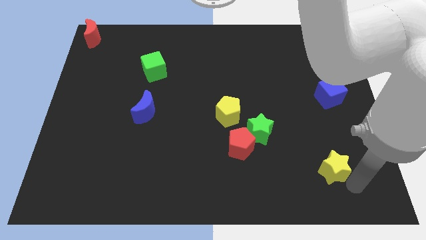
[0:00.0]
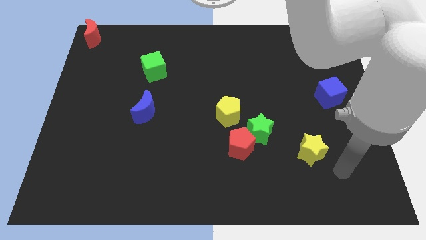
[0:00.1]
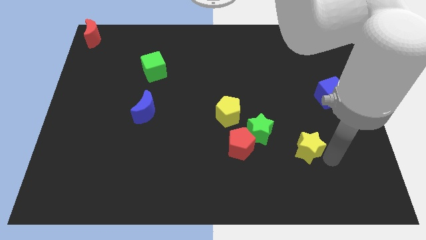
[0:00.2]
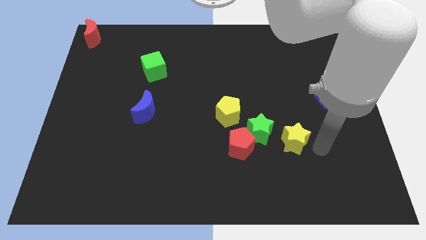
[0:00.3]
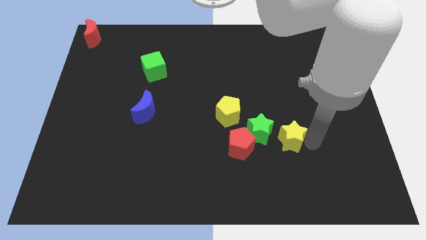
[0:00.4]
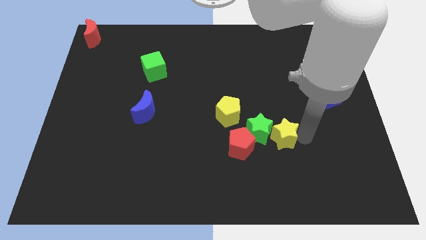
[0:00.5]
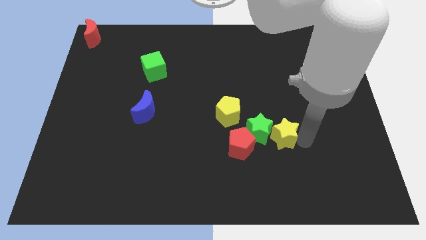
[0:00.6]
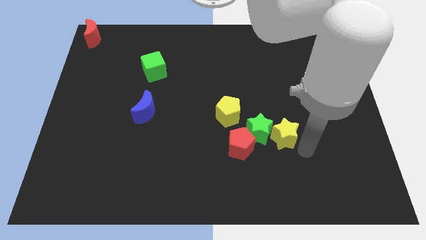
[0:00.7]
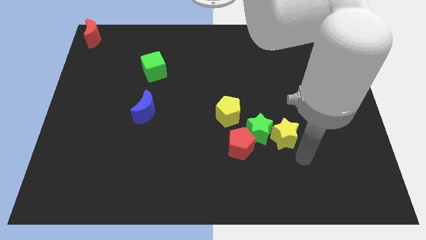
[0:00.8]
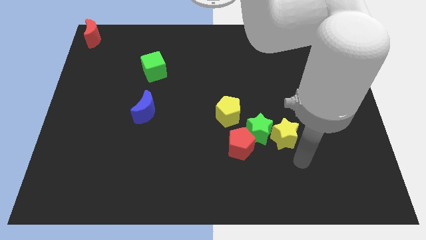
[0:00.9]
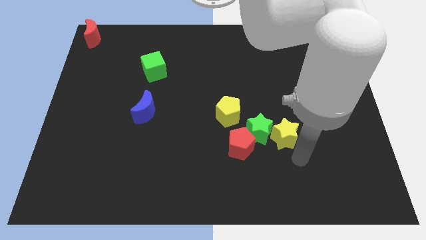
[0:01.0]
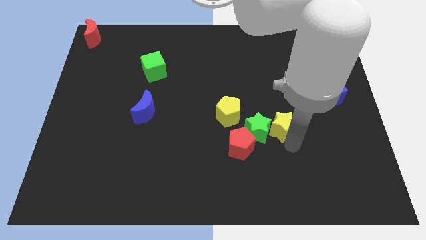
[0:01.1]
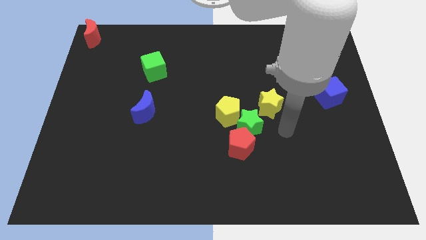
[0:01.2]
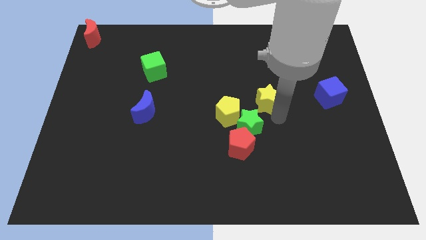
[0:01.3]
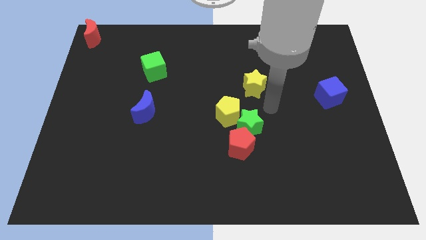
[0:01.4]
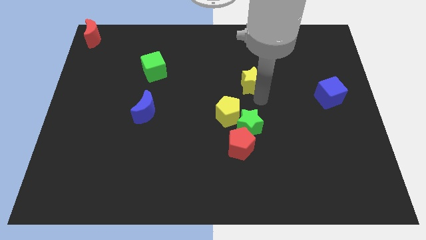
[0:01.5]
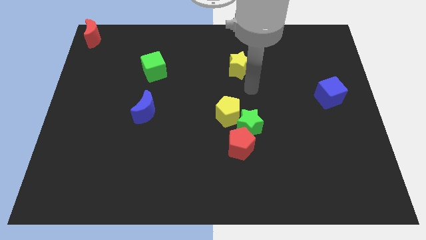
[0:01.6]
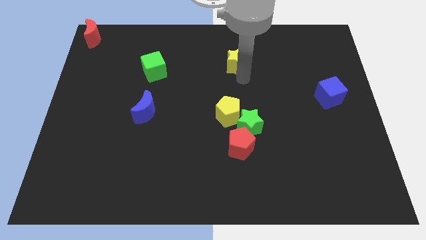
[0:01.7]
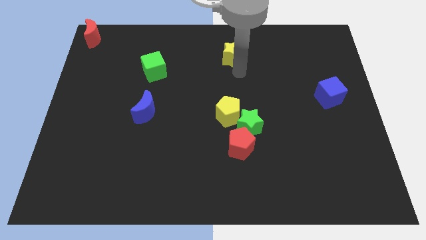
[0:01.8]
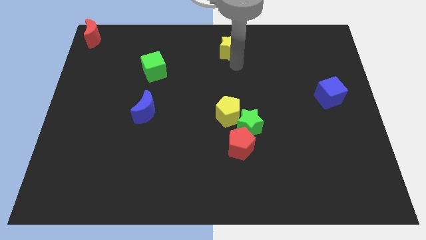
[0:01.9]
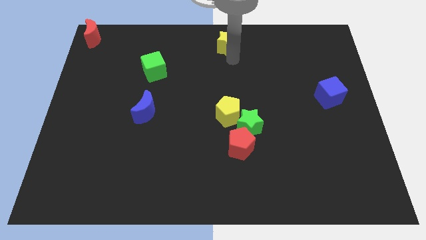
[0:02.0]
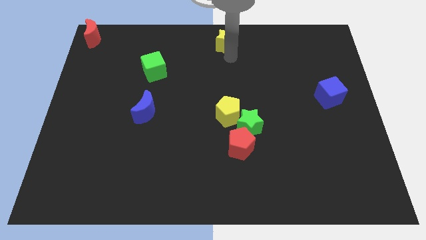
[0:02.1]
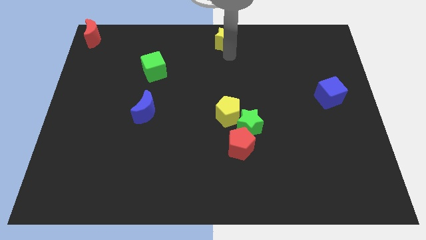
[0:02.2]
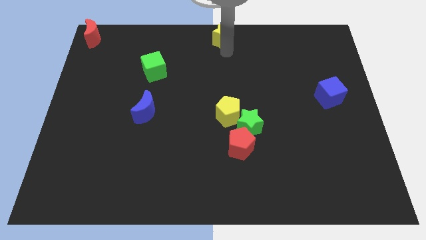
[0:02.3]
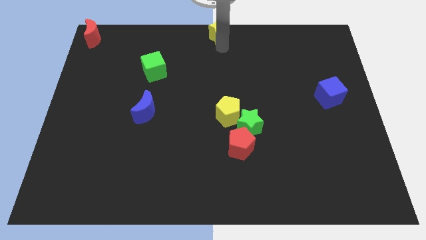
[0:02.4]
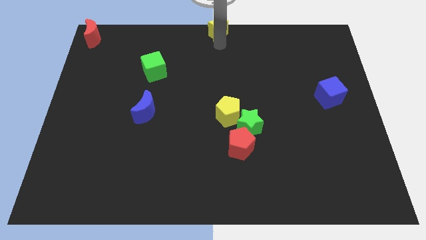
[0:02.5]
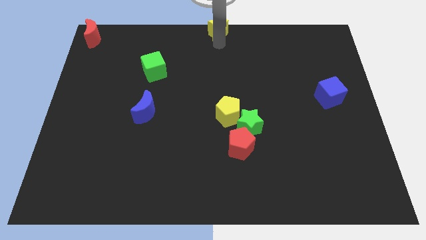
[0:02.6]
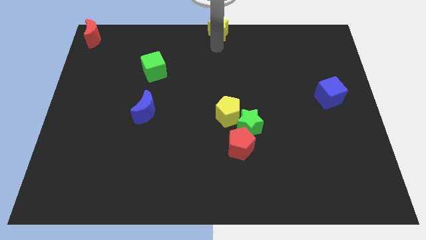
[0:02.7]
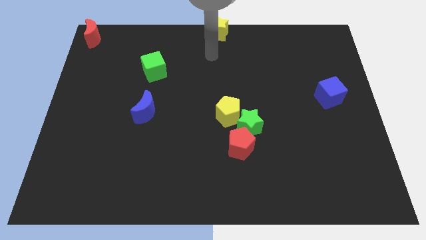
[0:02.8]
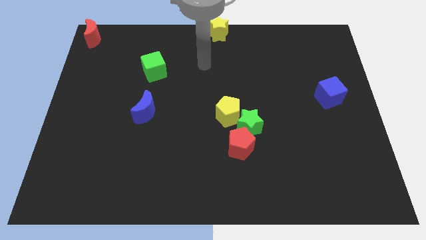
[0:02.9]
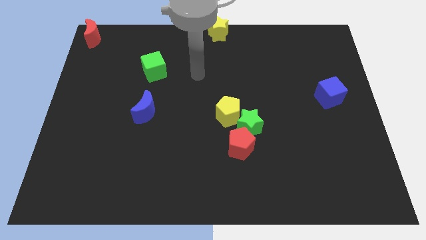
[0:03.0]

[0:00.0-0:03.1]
place yellow star to the top center of the board

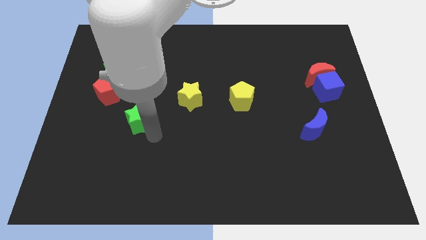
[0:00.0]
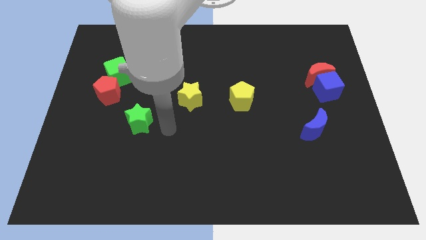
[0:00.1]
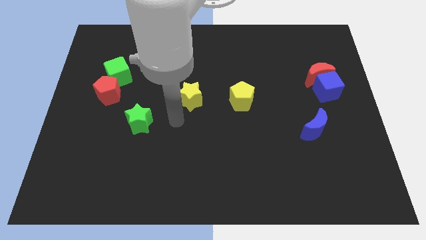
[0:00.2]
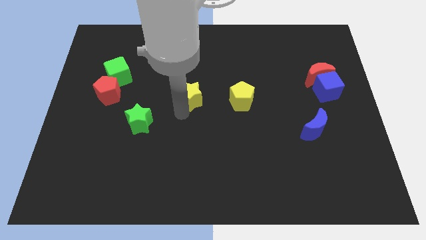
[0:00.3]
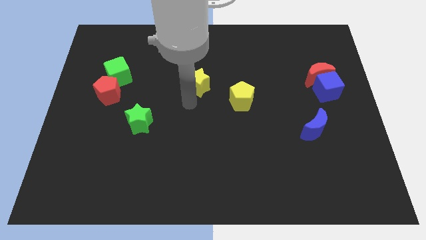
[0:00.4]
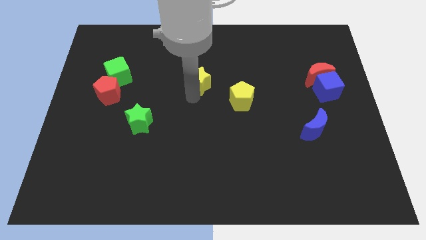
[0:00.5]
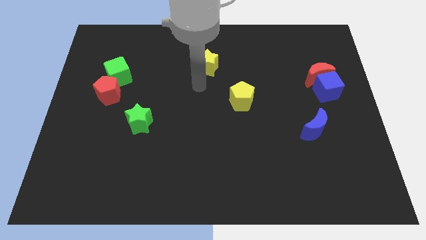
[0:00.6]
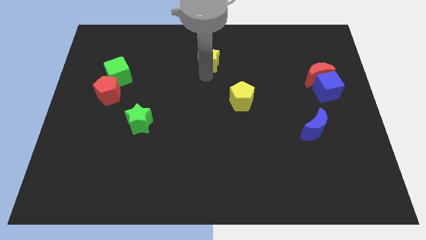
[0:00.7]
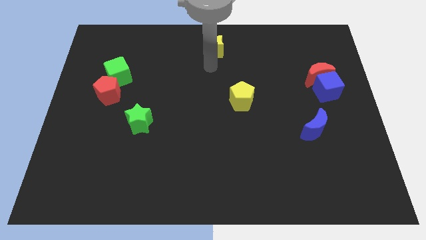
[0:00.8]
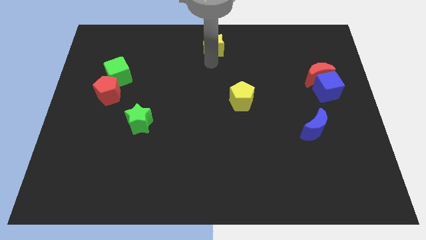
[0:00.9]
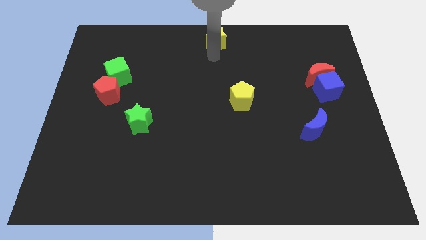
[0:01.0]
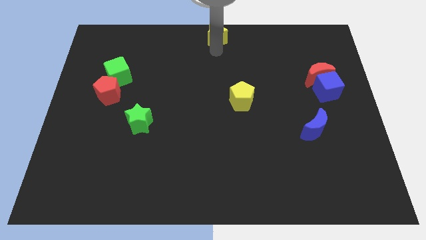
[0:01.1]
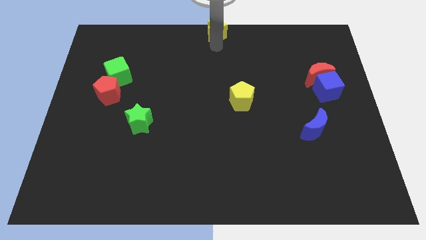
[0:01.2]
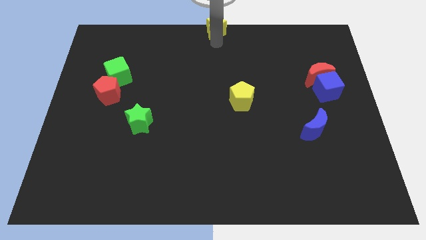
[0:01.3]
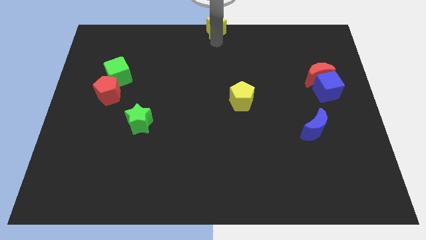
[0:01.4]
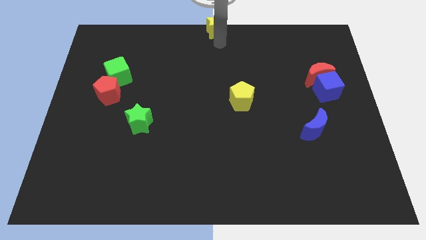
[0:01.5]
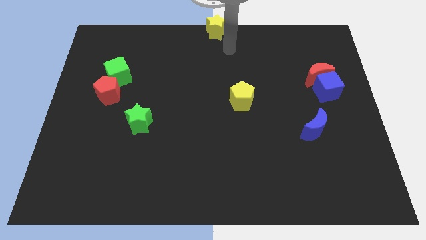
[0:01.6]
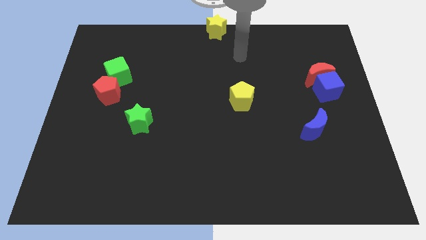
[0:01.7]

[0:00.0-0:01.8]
move the yellow star to the top center of the board

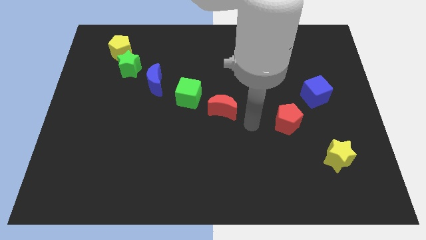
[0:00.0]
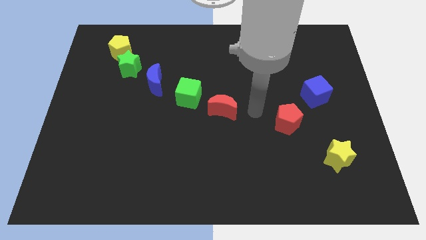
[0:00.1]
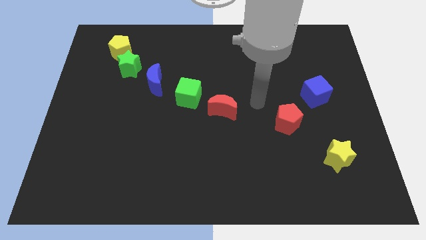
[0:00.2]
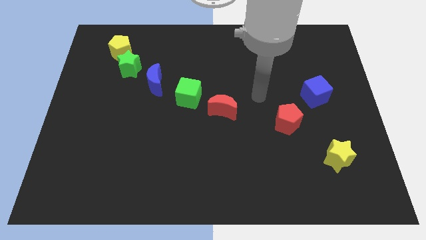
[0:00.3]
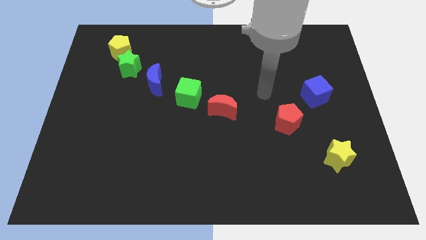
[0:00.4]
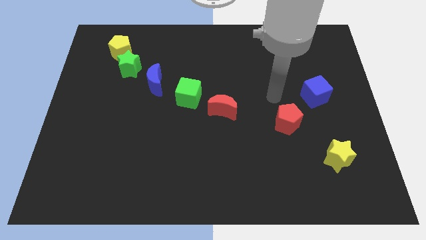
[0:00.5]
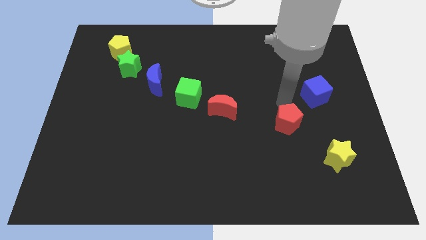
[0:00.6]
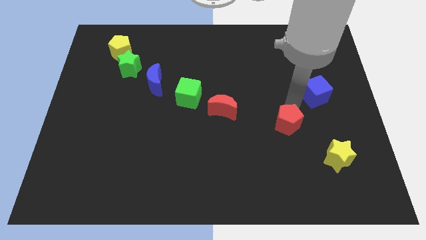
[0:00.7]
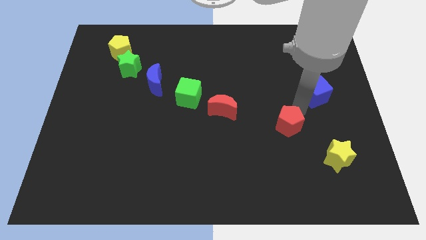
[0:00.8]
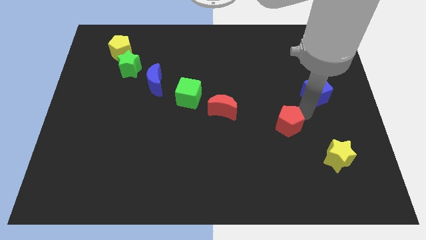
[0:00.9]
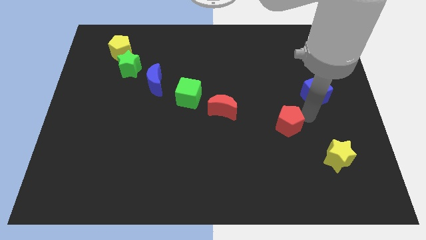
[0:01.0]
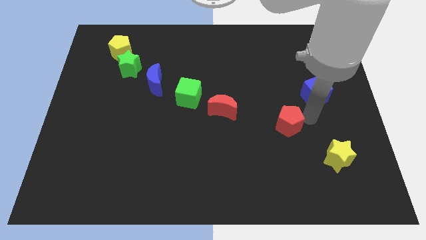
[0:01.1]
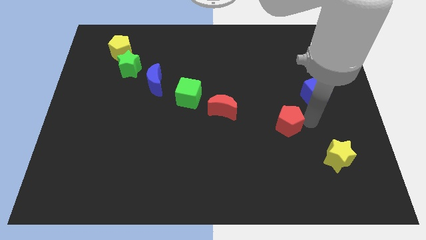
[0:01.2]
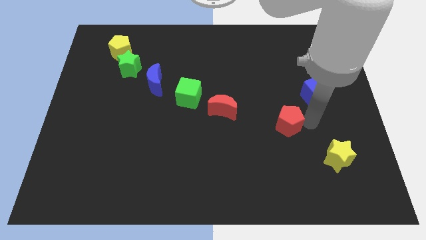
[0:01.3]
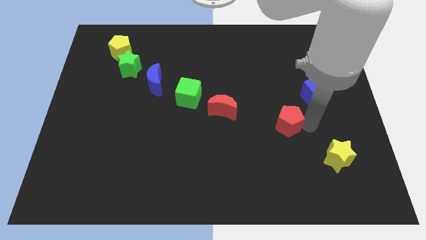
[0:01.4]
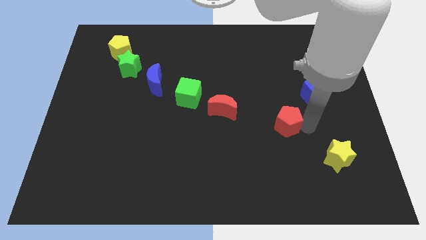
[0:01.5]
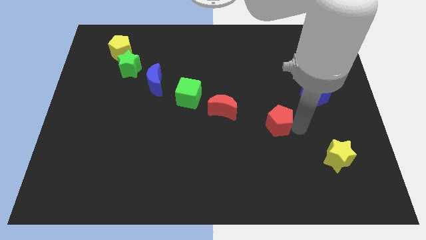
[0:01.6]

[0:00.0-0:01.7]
move the red pentagon towards the red crescent

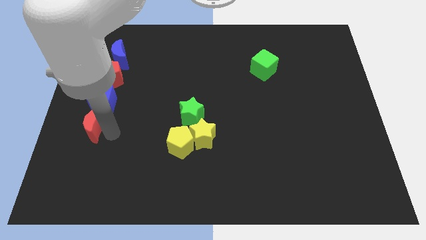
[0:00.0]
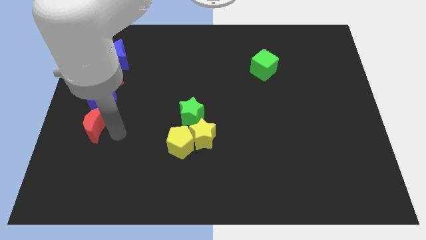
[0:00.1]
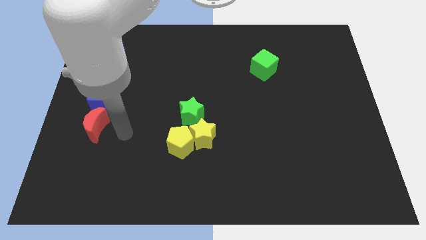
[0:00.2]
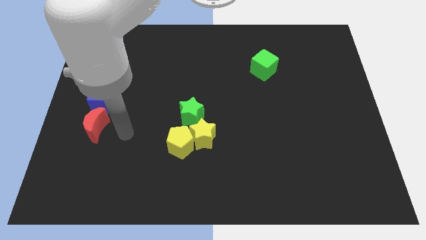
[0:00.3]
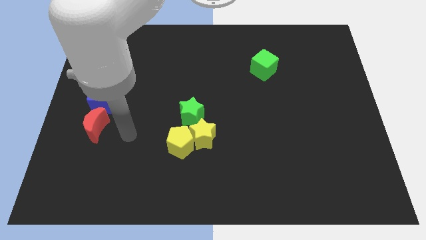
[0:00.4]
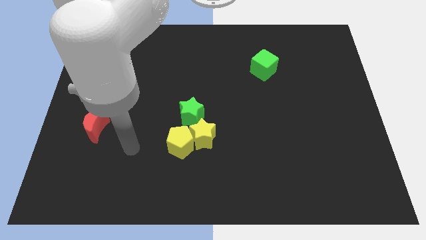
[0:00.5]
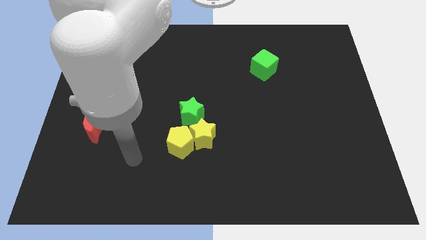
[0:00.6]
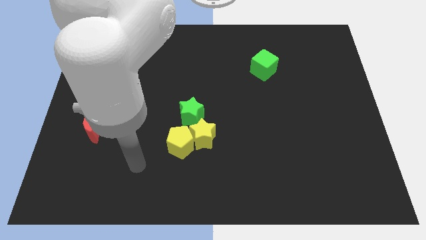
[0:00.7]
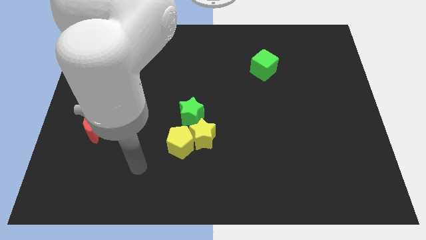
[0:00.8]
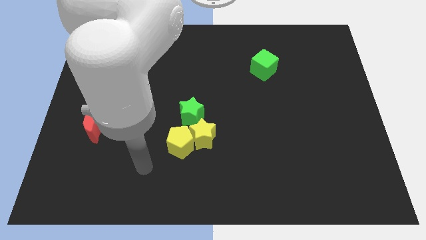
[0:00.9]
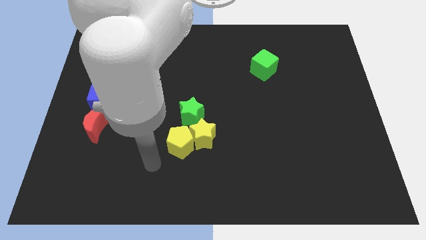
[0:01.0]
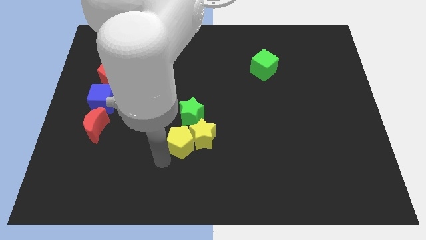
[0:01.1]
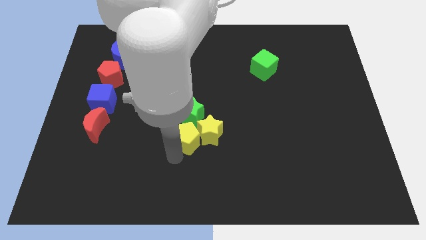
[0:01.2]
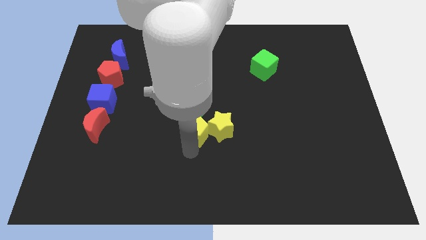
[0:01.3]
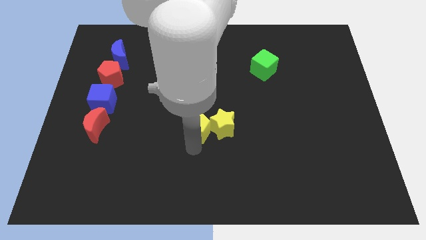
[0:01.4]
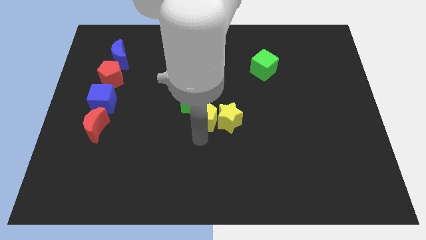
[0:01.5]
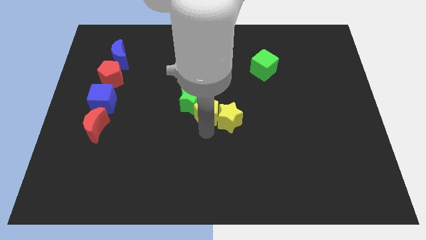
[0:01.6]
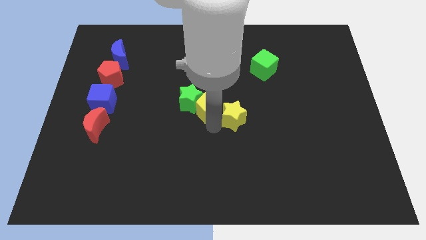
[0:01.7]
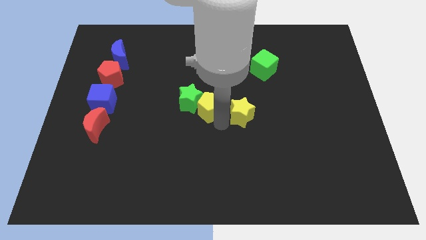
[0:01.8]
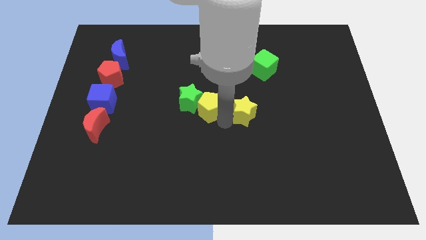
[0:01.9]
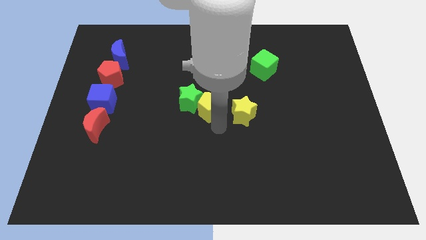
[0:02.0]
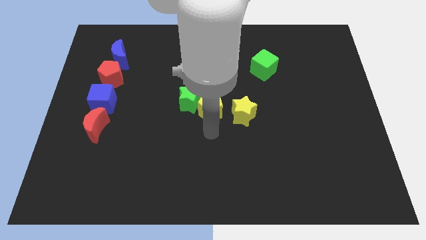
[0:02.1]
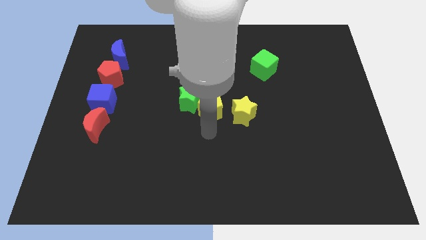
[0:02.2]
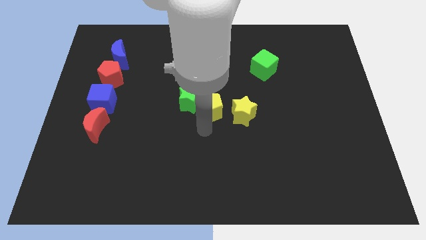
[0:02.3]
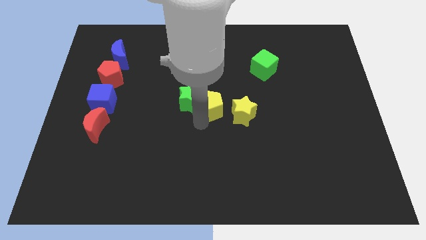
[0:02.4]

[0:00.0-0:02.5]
place yellow pentagon beside green star
